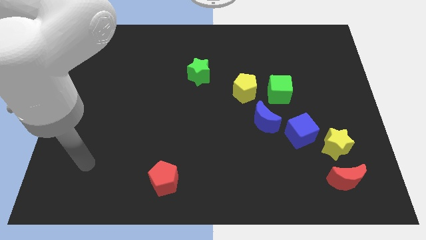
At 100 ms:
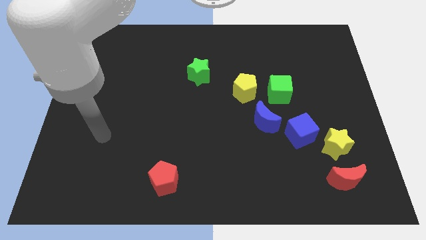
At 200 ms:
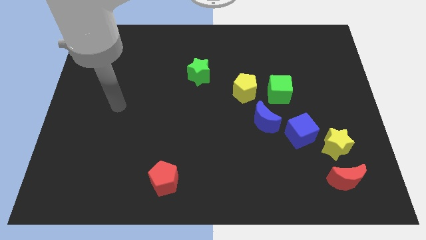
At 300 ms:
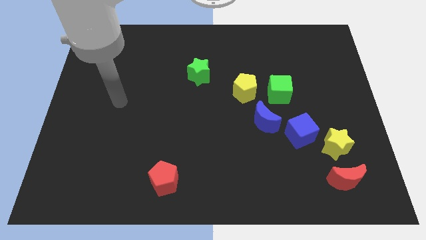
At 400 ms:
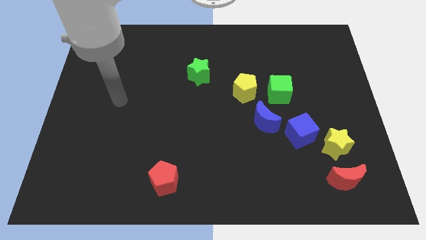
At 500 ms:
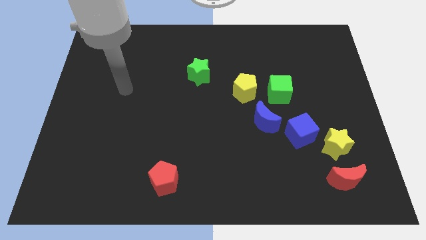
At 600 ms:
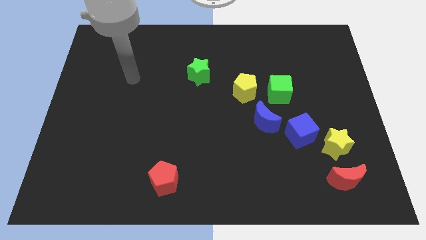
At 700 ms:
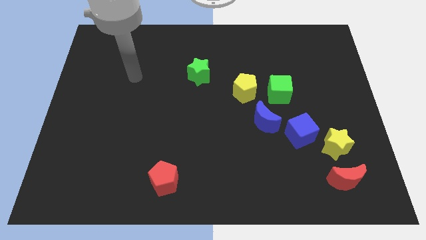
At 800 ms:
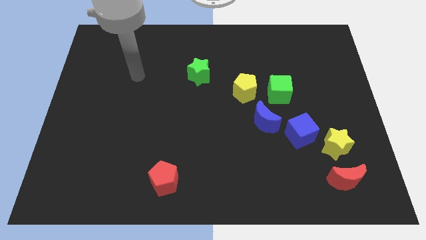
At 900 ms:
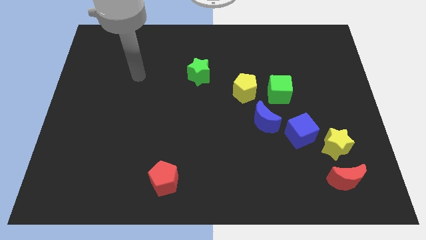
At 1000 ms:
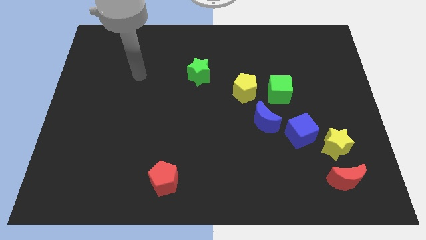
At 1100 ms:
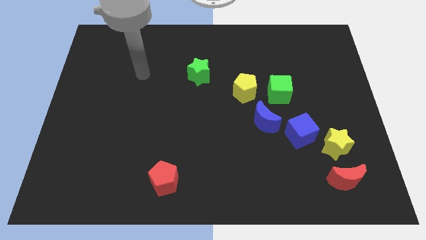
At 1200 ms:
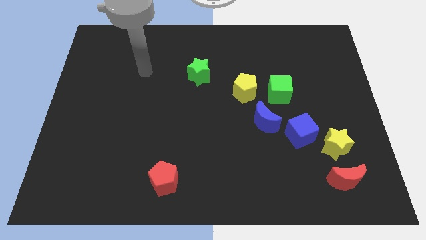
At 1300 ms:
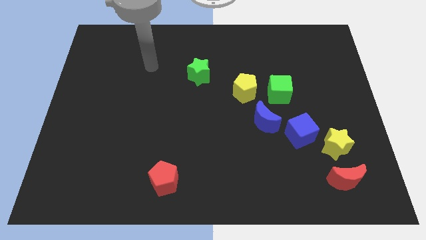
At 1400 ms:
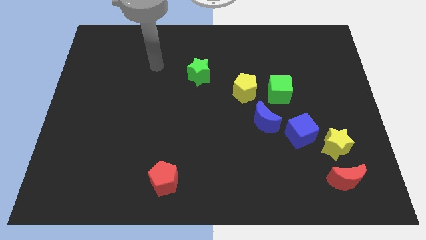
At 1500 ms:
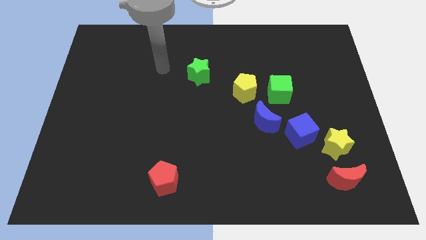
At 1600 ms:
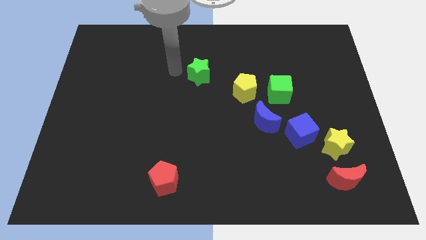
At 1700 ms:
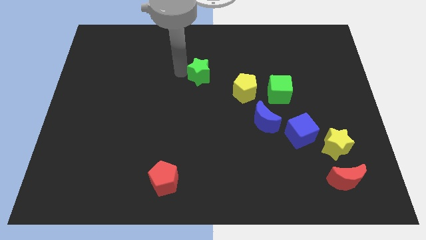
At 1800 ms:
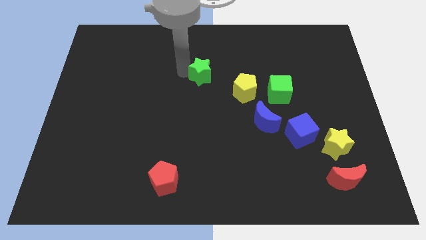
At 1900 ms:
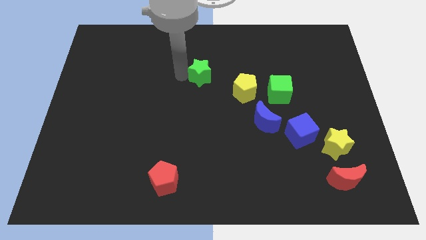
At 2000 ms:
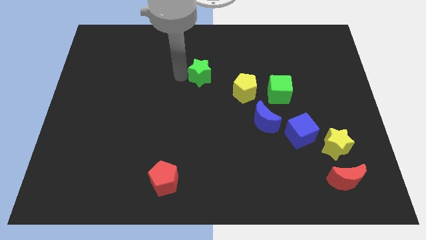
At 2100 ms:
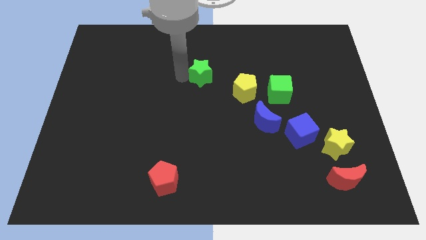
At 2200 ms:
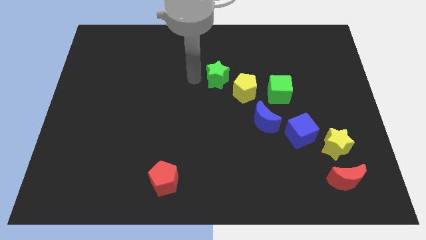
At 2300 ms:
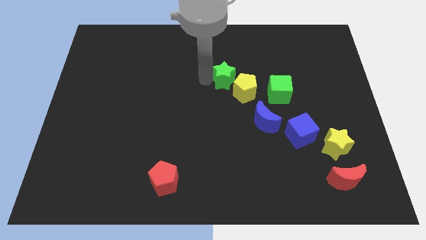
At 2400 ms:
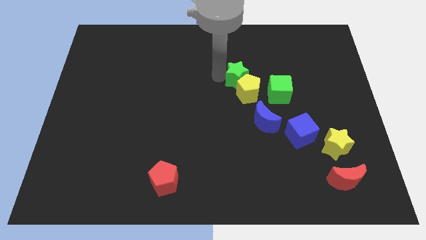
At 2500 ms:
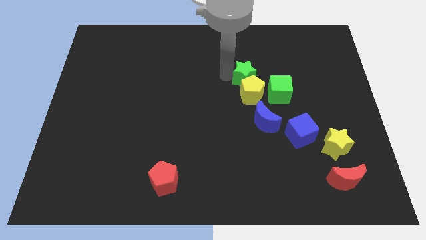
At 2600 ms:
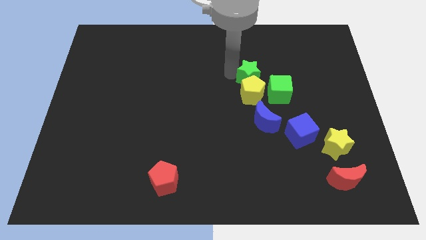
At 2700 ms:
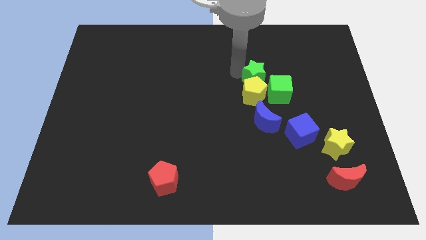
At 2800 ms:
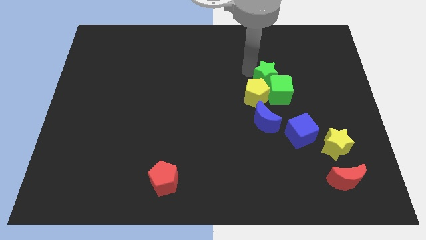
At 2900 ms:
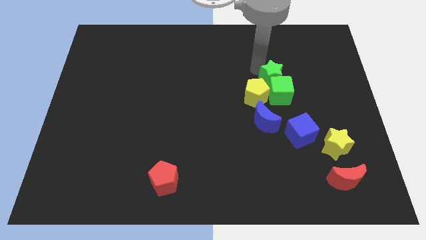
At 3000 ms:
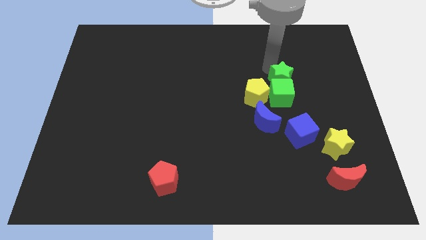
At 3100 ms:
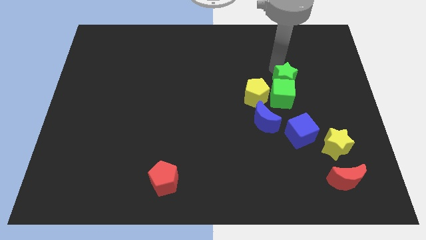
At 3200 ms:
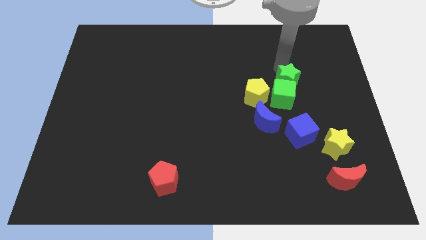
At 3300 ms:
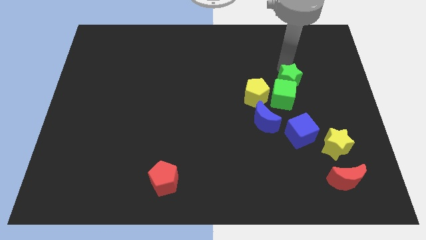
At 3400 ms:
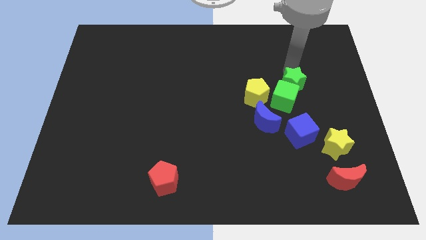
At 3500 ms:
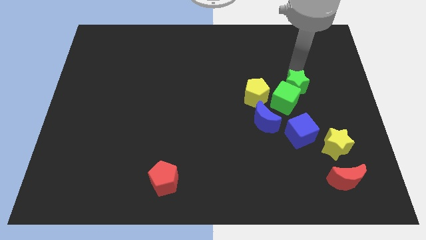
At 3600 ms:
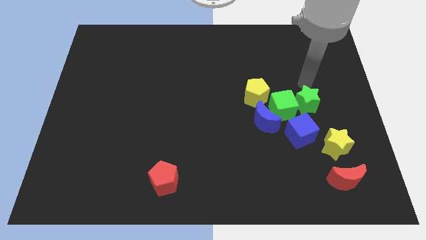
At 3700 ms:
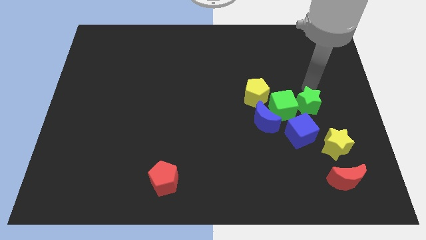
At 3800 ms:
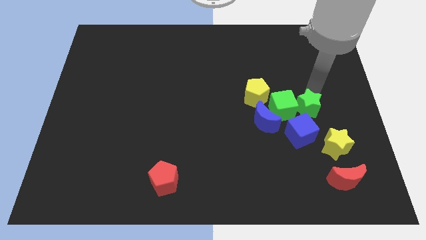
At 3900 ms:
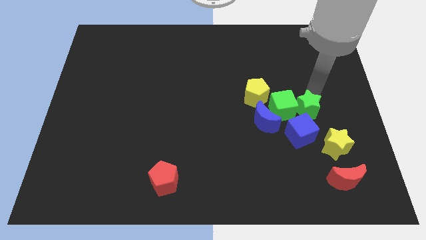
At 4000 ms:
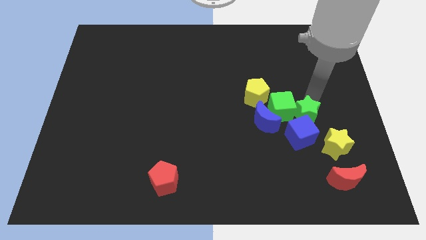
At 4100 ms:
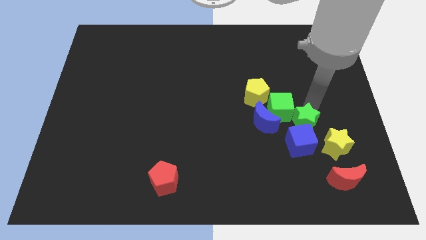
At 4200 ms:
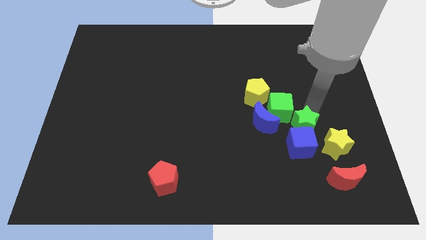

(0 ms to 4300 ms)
move the green star to the blue cube

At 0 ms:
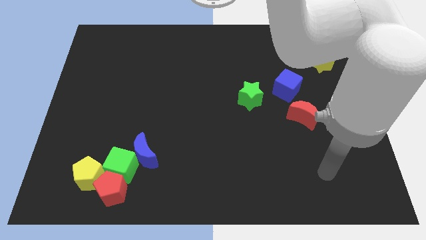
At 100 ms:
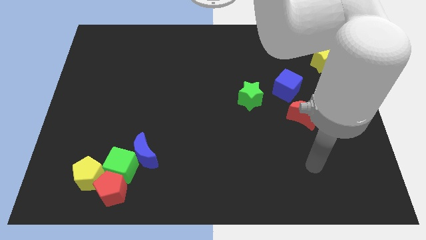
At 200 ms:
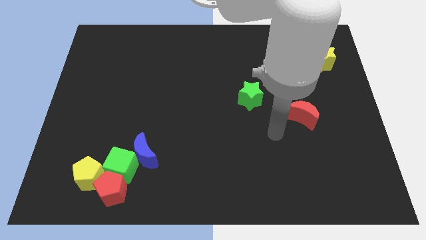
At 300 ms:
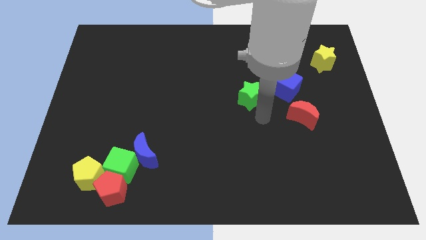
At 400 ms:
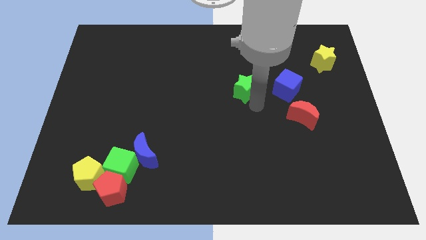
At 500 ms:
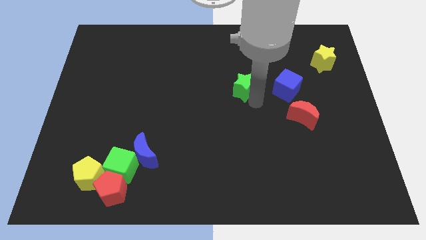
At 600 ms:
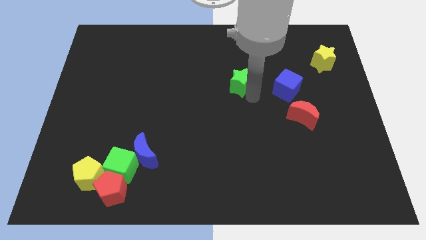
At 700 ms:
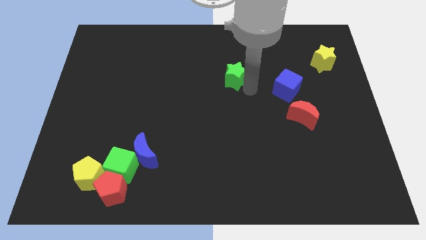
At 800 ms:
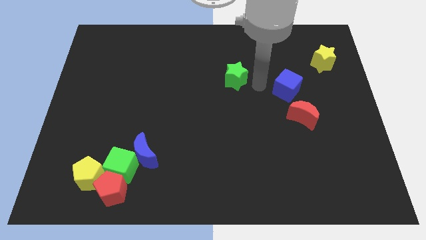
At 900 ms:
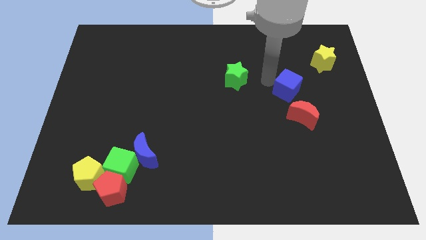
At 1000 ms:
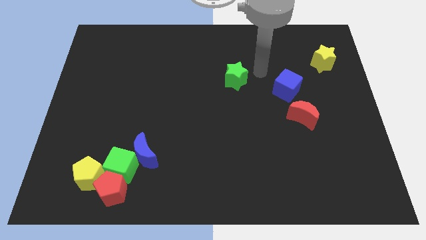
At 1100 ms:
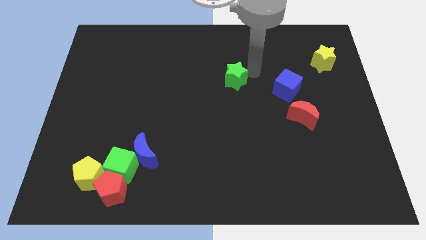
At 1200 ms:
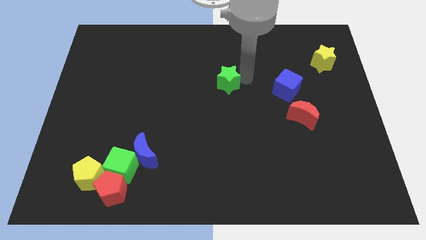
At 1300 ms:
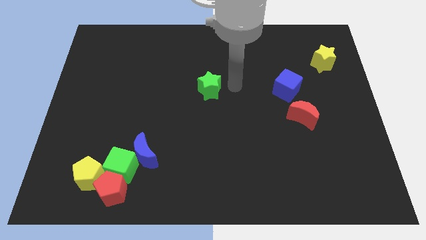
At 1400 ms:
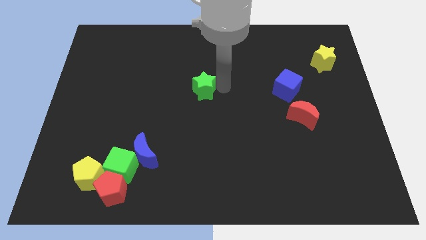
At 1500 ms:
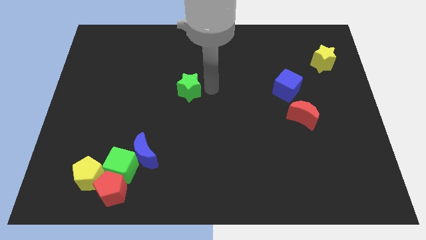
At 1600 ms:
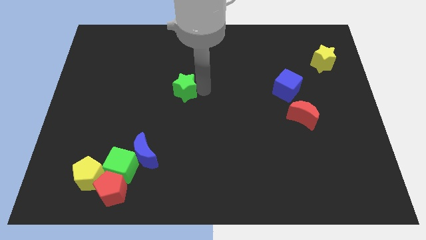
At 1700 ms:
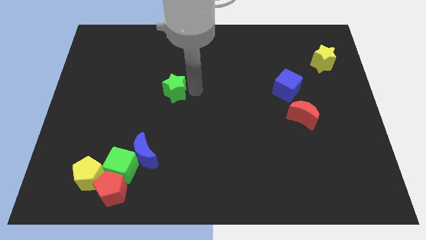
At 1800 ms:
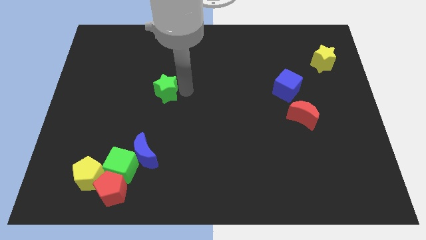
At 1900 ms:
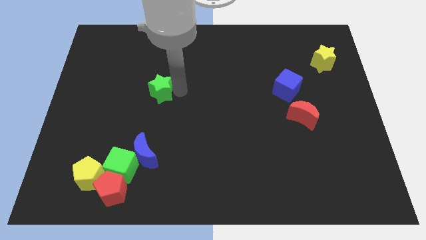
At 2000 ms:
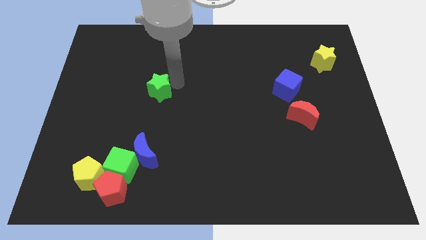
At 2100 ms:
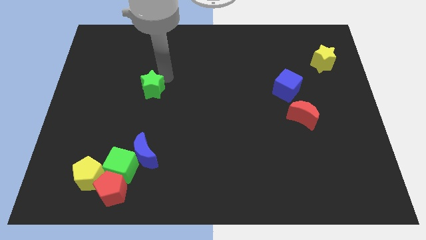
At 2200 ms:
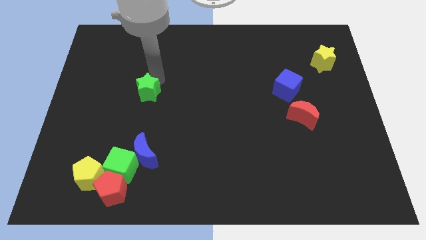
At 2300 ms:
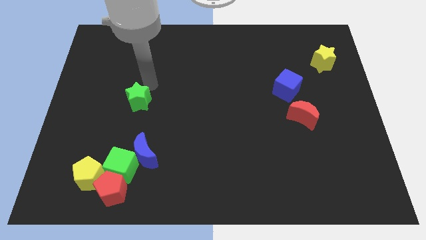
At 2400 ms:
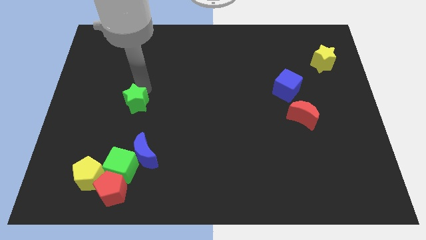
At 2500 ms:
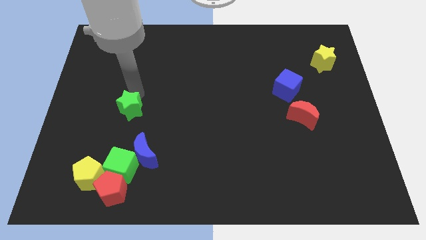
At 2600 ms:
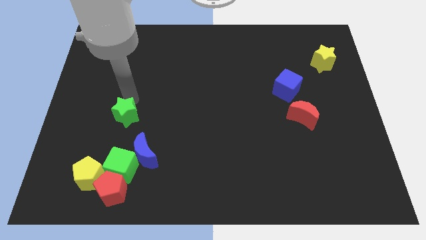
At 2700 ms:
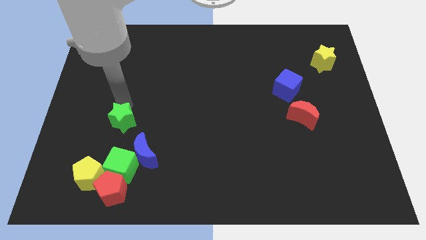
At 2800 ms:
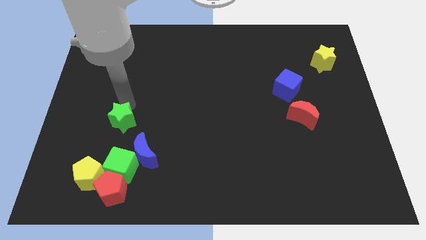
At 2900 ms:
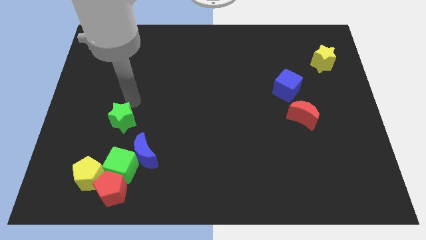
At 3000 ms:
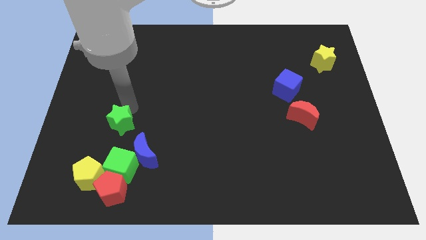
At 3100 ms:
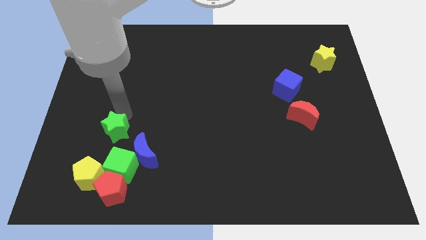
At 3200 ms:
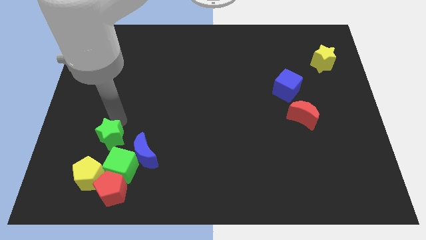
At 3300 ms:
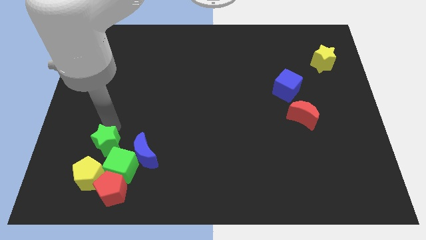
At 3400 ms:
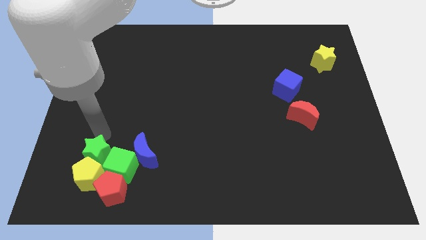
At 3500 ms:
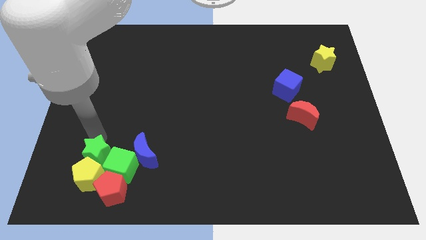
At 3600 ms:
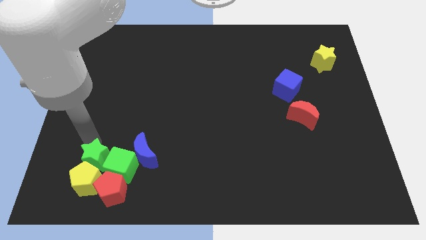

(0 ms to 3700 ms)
slide the green star to the yellow pentagon

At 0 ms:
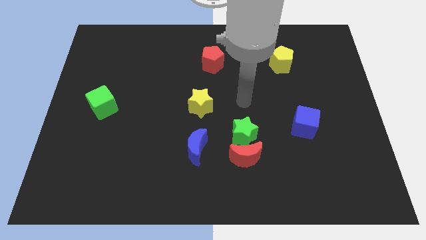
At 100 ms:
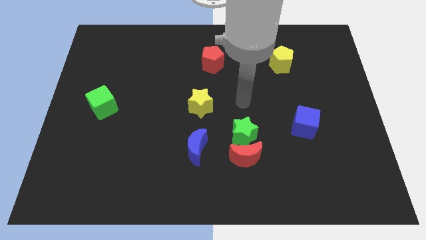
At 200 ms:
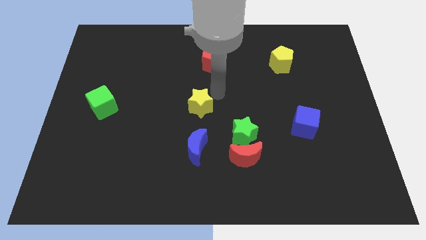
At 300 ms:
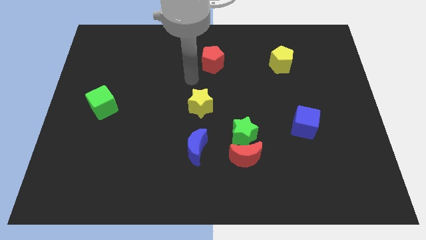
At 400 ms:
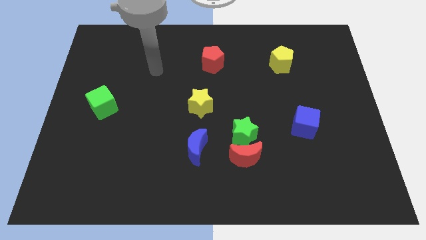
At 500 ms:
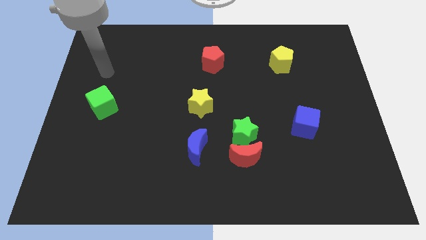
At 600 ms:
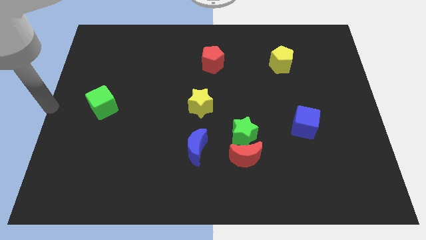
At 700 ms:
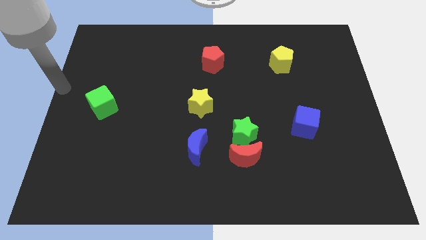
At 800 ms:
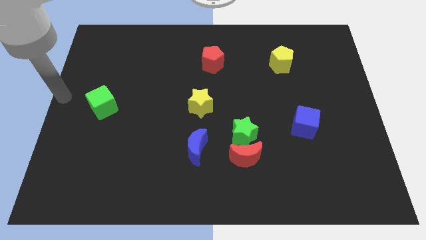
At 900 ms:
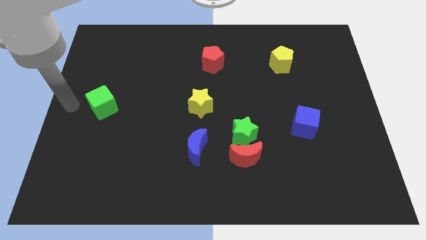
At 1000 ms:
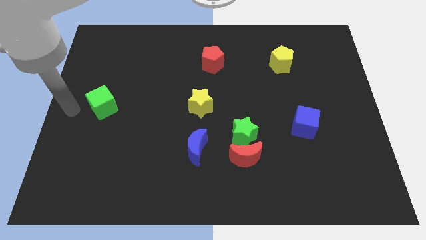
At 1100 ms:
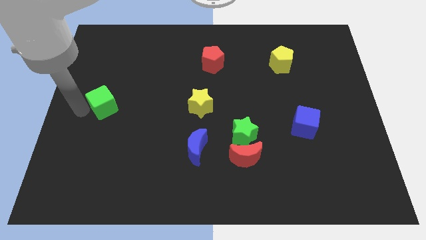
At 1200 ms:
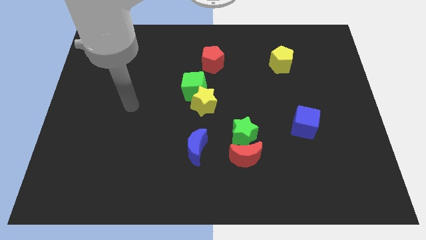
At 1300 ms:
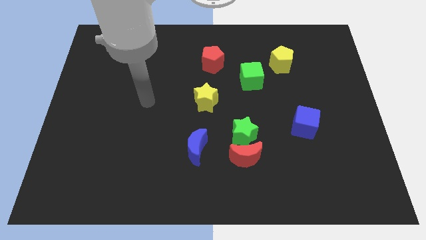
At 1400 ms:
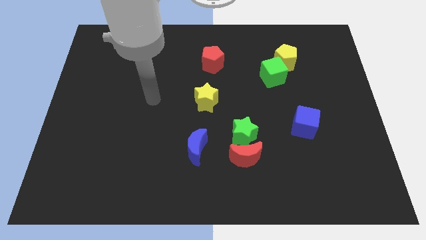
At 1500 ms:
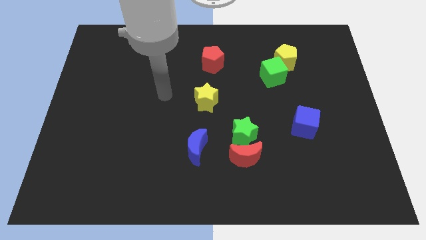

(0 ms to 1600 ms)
put the green cube close to the yellow pentagon
